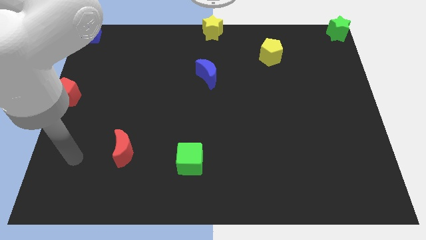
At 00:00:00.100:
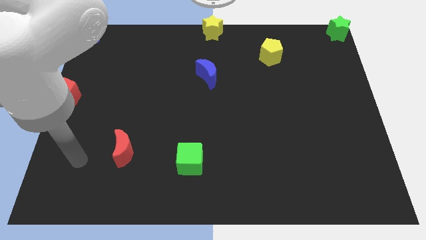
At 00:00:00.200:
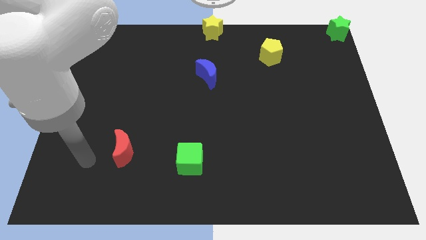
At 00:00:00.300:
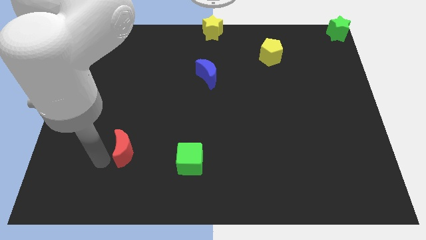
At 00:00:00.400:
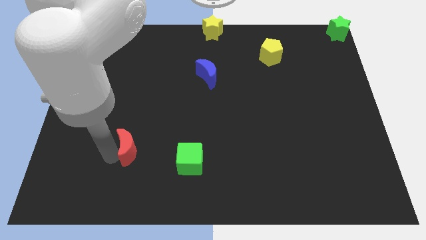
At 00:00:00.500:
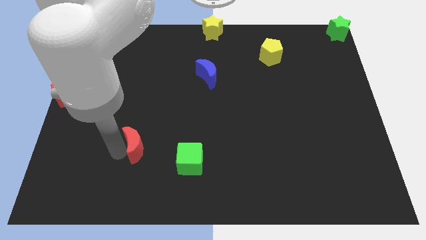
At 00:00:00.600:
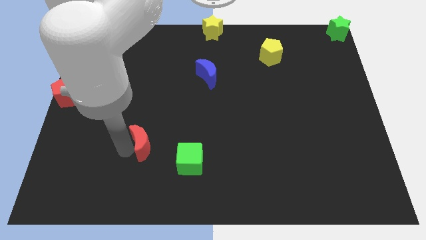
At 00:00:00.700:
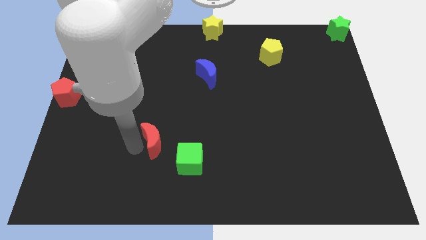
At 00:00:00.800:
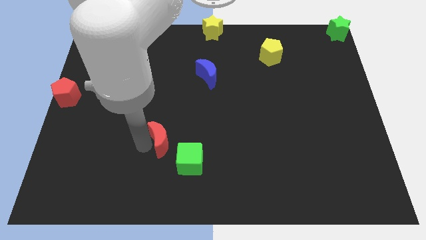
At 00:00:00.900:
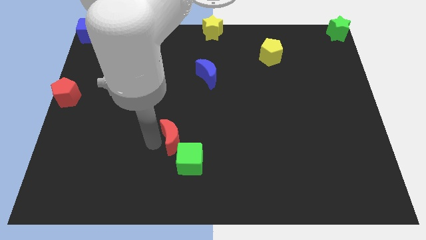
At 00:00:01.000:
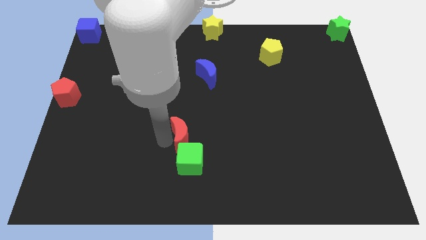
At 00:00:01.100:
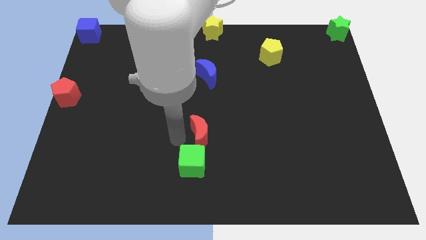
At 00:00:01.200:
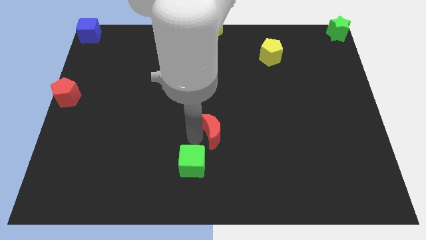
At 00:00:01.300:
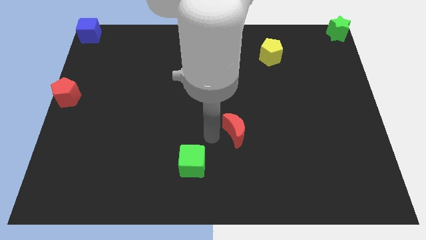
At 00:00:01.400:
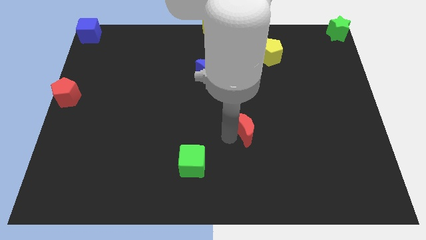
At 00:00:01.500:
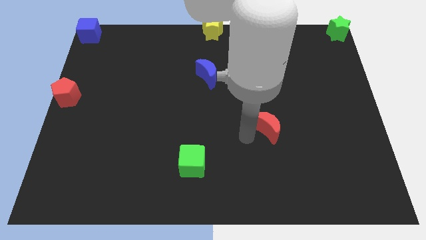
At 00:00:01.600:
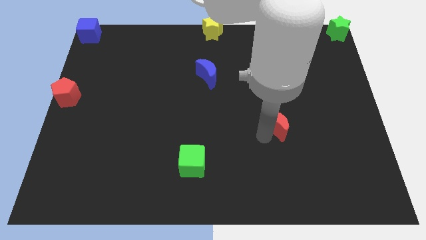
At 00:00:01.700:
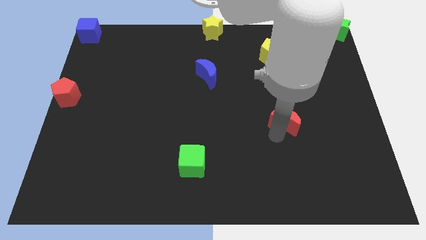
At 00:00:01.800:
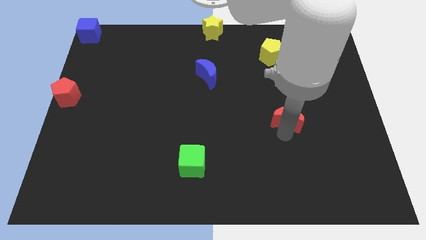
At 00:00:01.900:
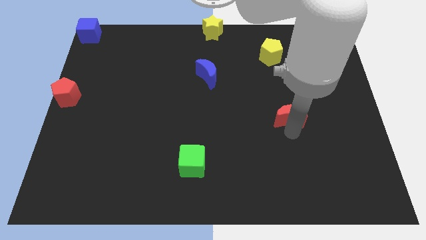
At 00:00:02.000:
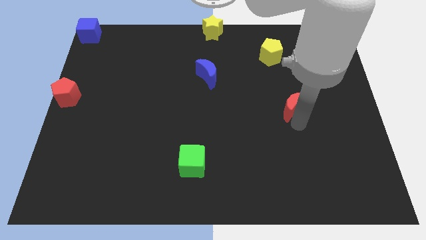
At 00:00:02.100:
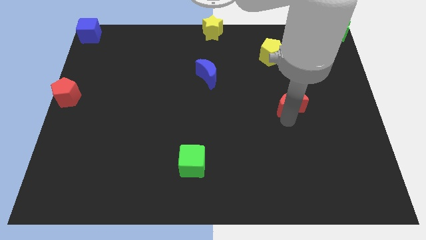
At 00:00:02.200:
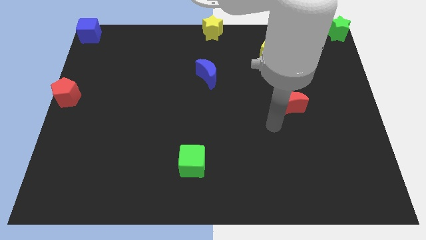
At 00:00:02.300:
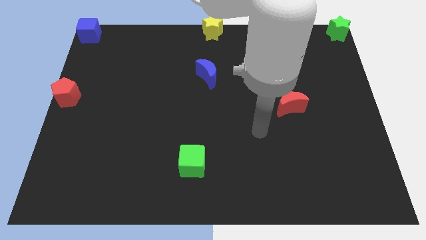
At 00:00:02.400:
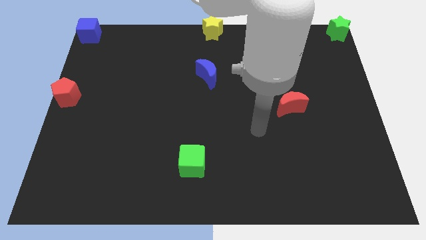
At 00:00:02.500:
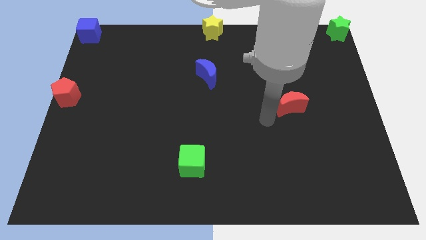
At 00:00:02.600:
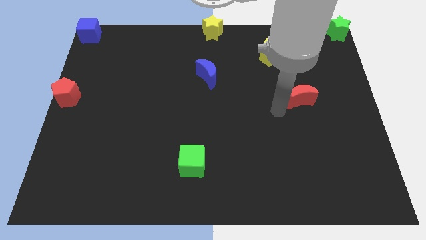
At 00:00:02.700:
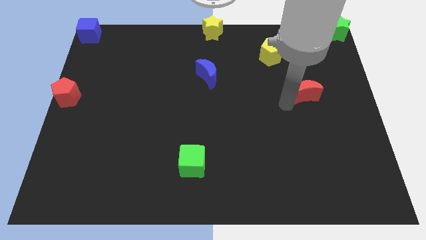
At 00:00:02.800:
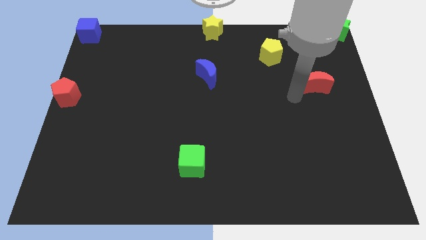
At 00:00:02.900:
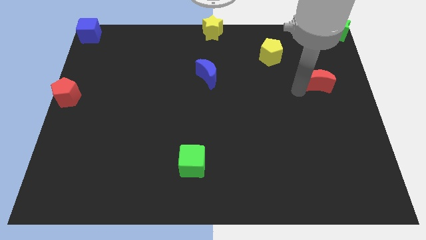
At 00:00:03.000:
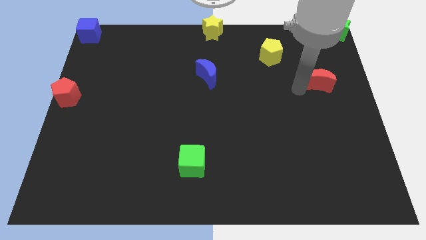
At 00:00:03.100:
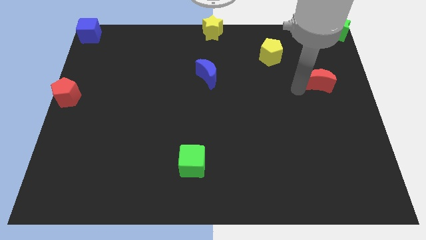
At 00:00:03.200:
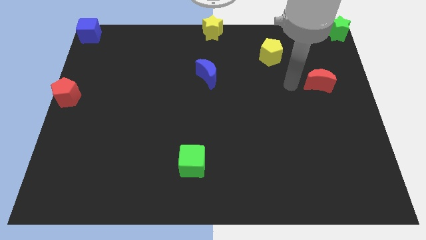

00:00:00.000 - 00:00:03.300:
push the red crescent

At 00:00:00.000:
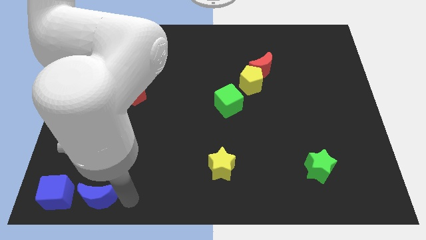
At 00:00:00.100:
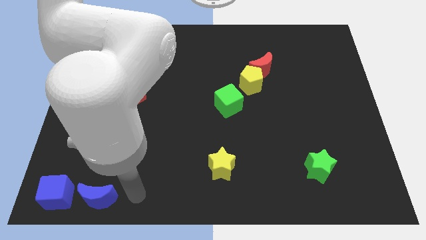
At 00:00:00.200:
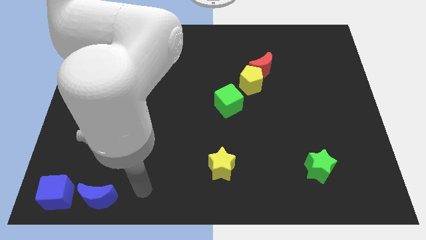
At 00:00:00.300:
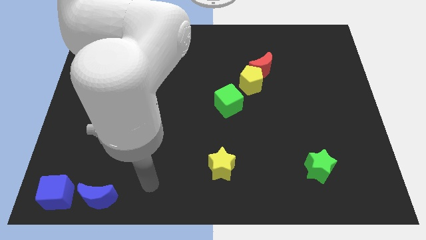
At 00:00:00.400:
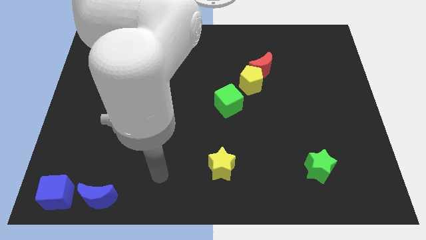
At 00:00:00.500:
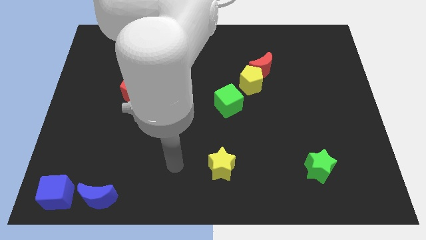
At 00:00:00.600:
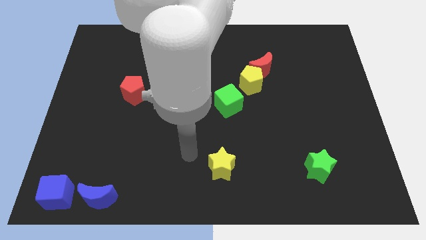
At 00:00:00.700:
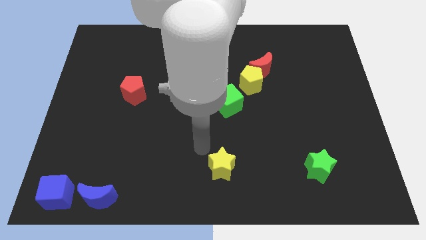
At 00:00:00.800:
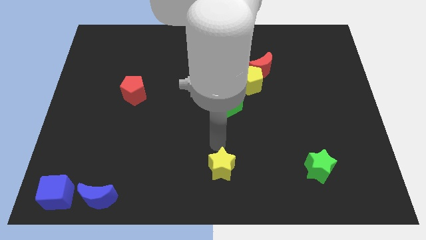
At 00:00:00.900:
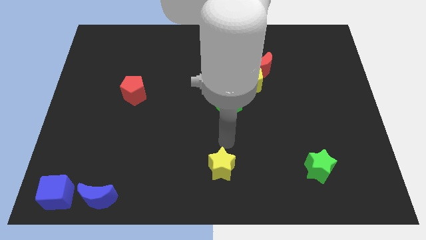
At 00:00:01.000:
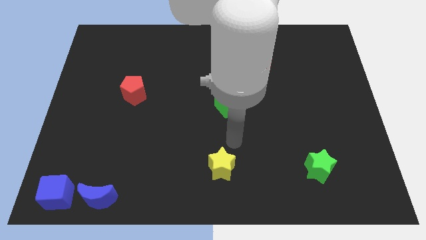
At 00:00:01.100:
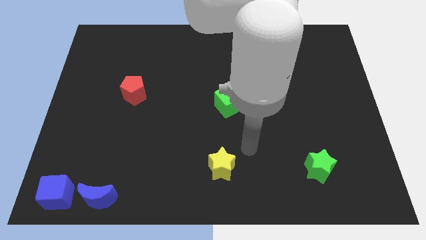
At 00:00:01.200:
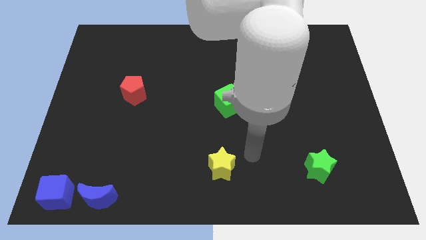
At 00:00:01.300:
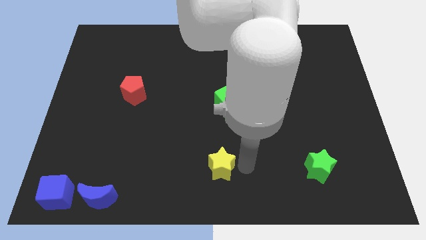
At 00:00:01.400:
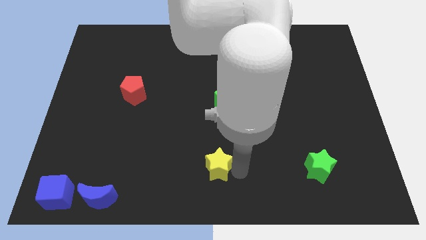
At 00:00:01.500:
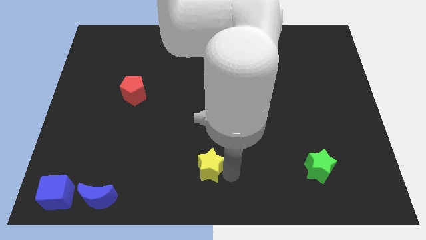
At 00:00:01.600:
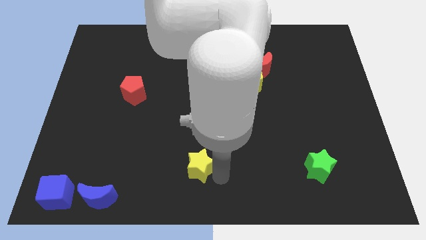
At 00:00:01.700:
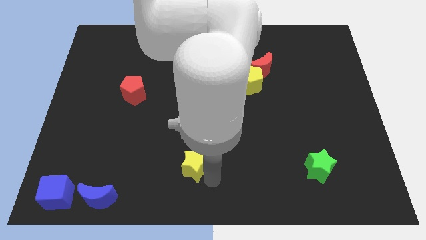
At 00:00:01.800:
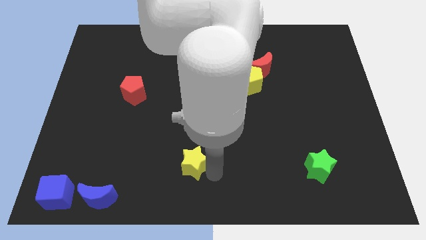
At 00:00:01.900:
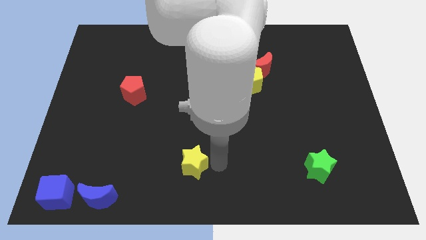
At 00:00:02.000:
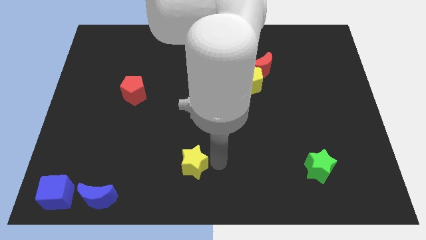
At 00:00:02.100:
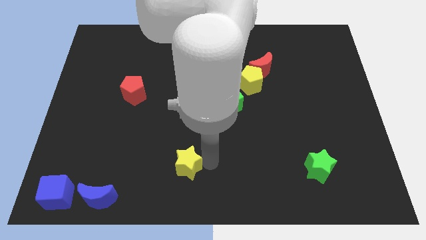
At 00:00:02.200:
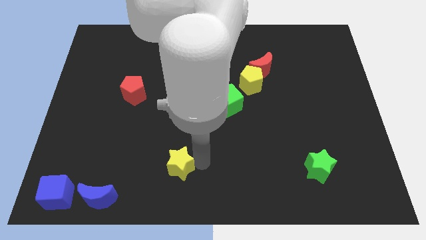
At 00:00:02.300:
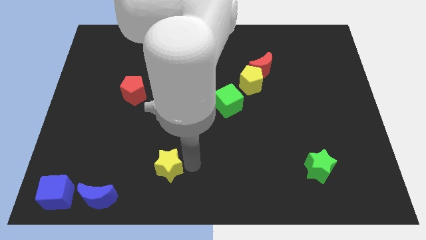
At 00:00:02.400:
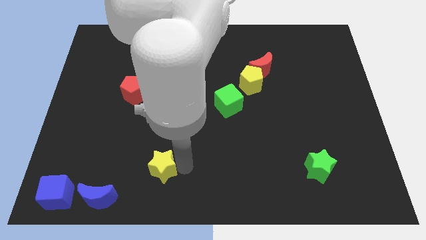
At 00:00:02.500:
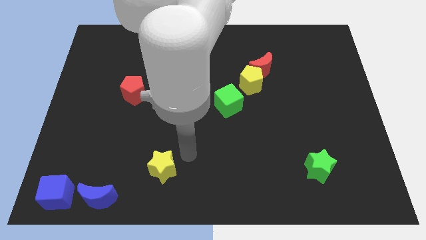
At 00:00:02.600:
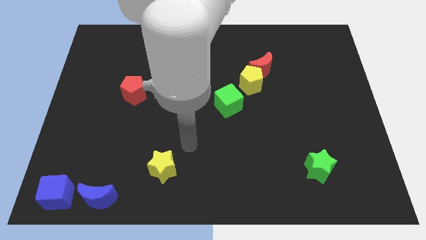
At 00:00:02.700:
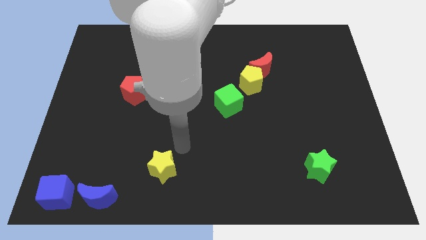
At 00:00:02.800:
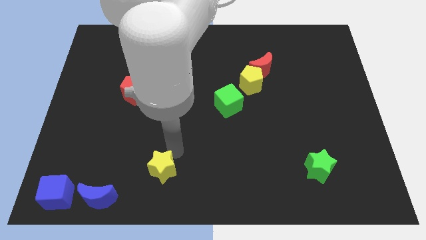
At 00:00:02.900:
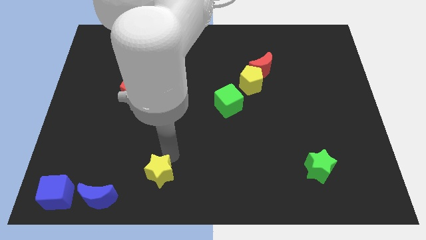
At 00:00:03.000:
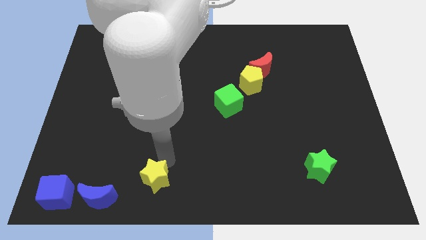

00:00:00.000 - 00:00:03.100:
push the yellow star towards the blue crescent

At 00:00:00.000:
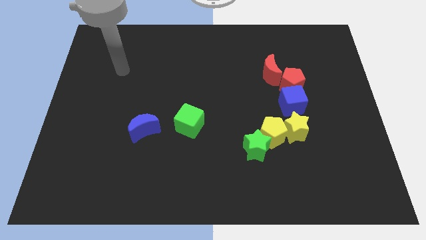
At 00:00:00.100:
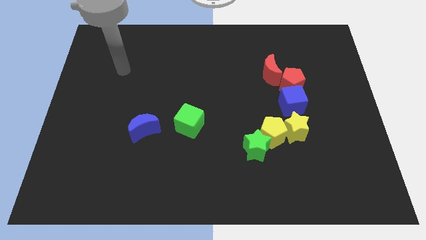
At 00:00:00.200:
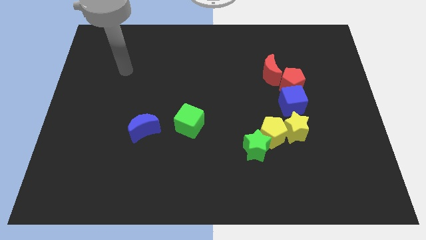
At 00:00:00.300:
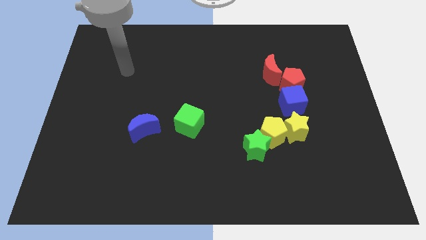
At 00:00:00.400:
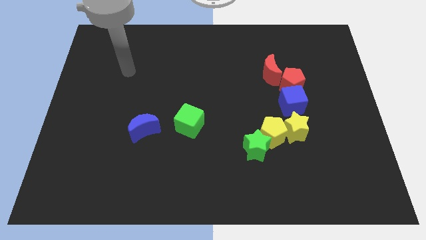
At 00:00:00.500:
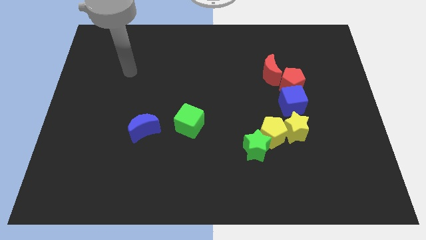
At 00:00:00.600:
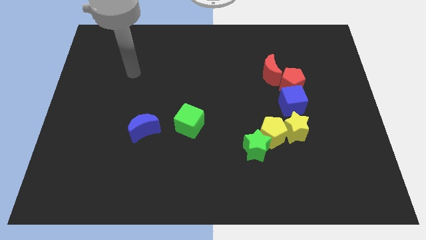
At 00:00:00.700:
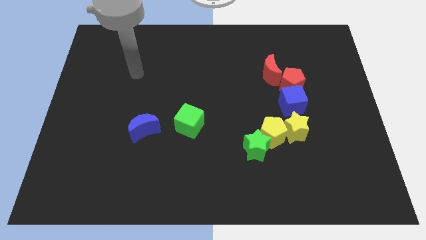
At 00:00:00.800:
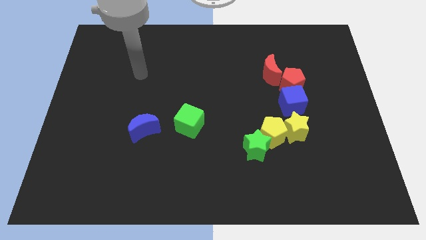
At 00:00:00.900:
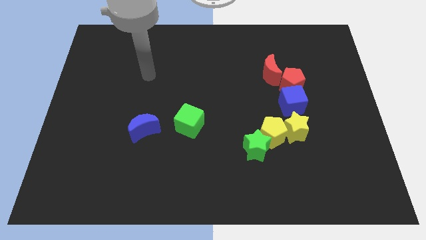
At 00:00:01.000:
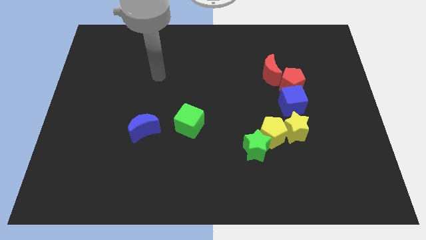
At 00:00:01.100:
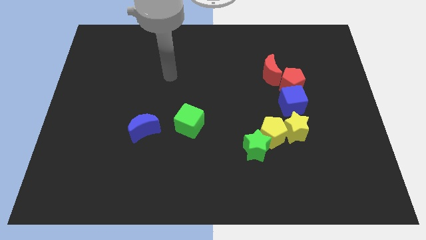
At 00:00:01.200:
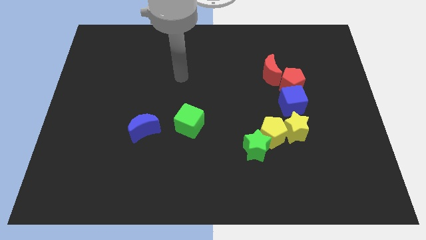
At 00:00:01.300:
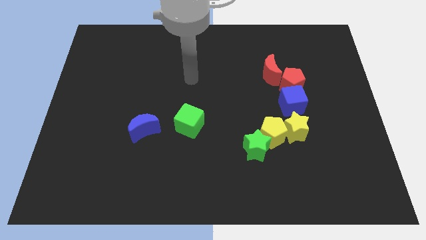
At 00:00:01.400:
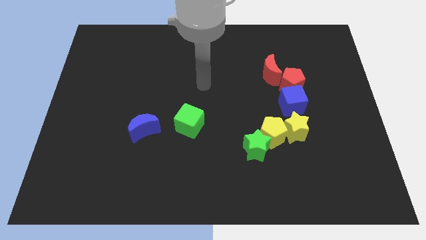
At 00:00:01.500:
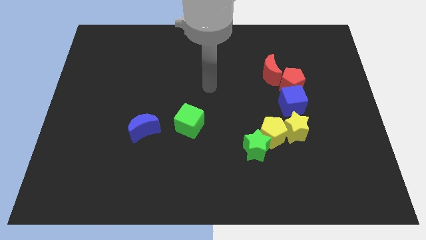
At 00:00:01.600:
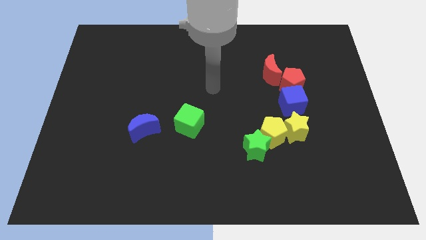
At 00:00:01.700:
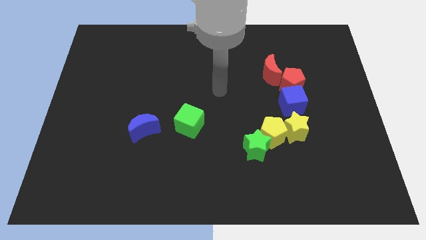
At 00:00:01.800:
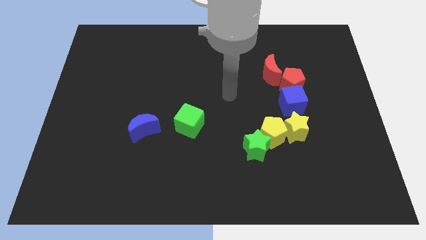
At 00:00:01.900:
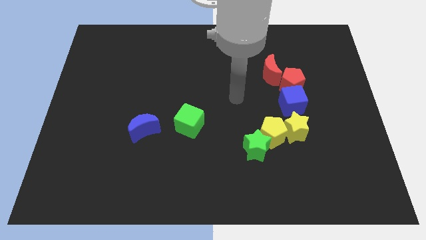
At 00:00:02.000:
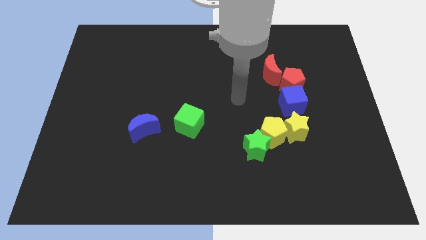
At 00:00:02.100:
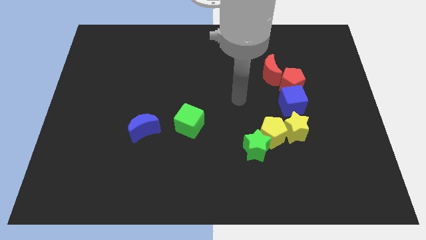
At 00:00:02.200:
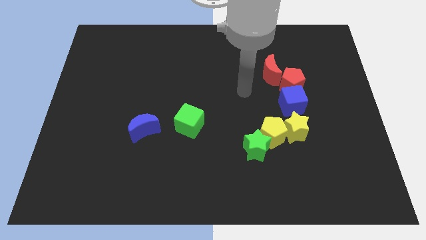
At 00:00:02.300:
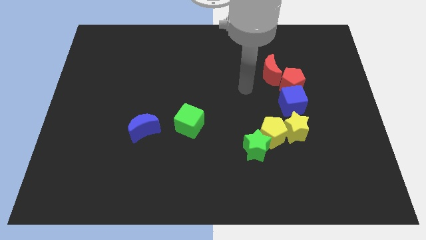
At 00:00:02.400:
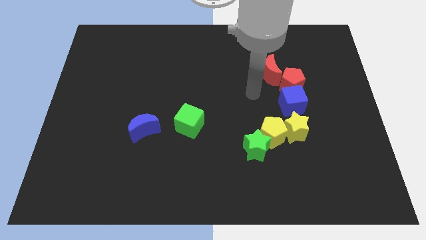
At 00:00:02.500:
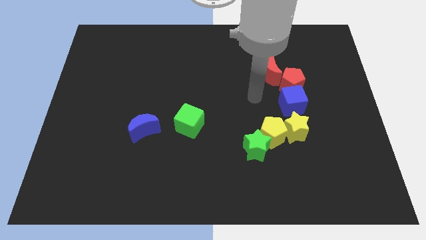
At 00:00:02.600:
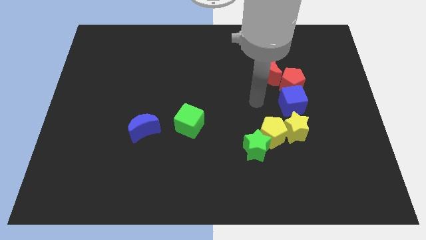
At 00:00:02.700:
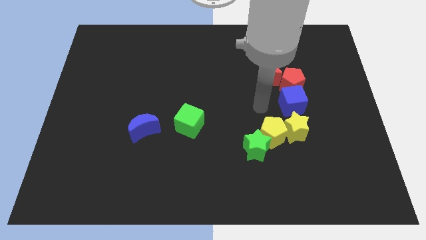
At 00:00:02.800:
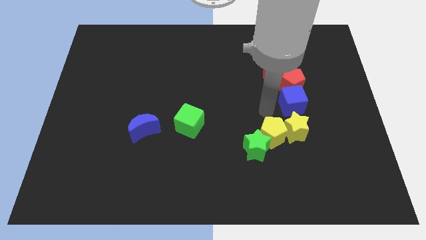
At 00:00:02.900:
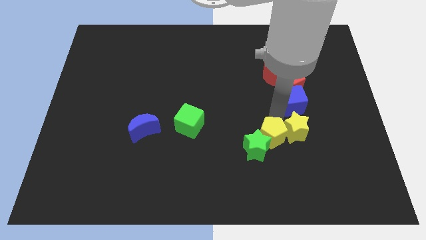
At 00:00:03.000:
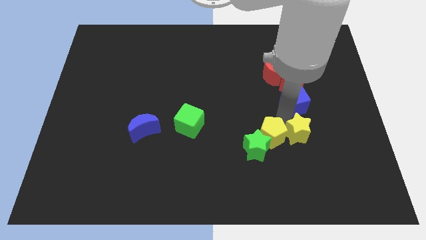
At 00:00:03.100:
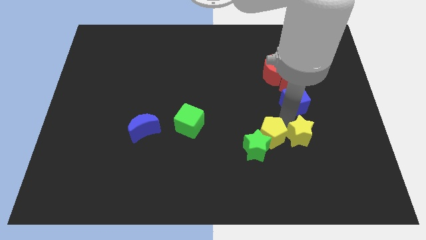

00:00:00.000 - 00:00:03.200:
place the arm diagonally to the yellow star
